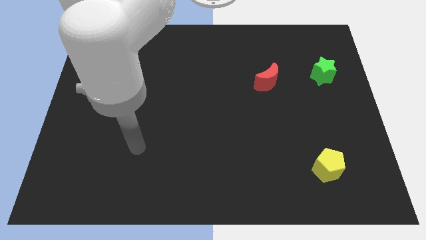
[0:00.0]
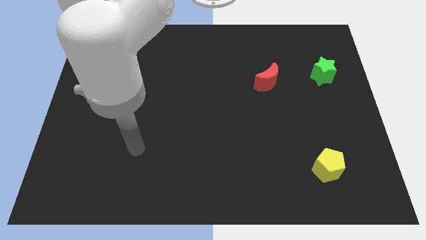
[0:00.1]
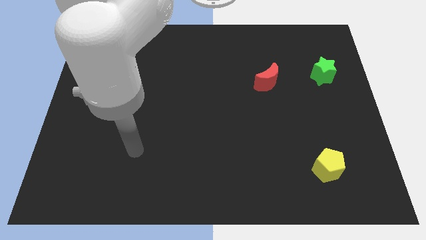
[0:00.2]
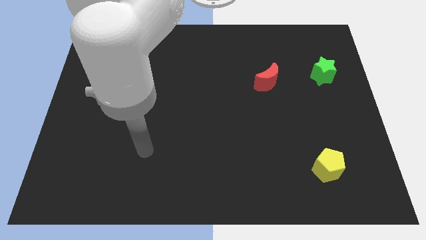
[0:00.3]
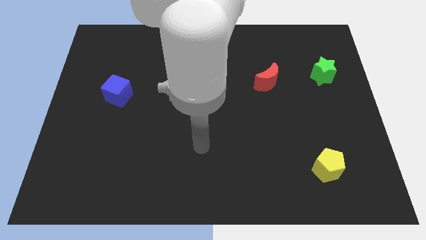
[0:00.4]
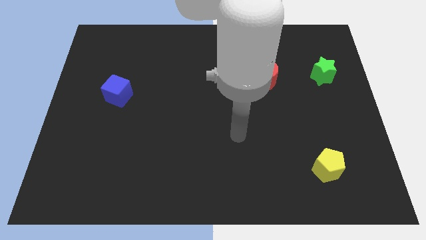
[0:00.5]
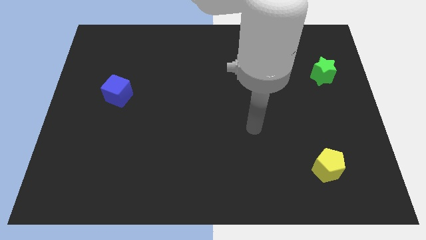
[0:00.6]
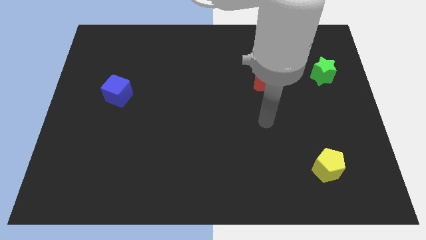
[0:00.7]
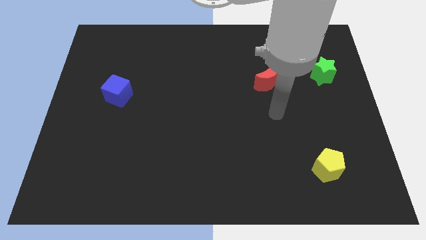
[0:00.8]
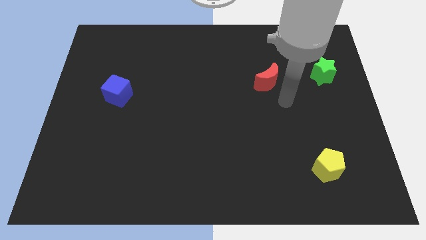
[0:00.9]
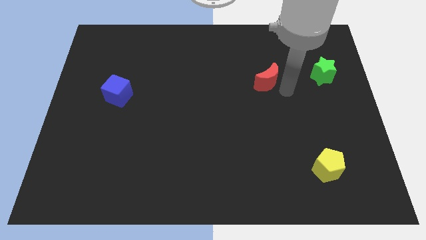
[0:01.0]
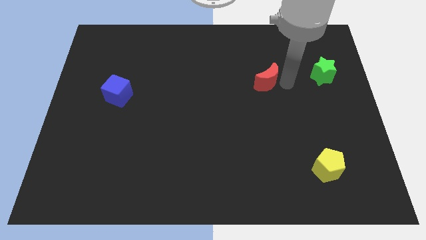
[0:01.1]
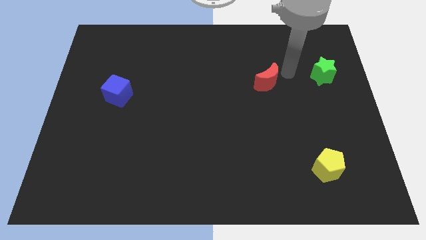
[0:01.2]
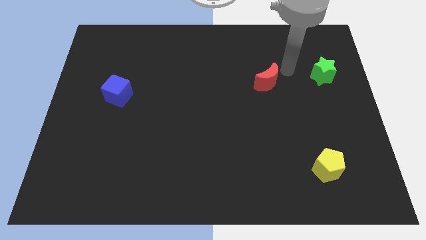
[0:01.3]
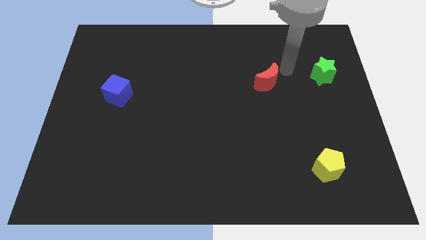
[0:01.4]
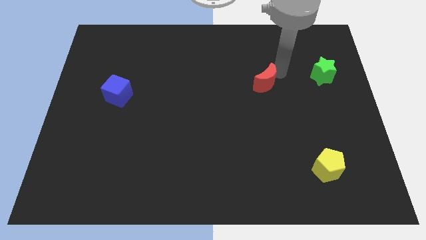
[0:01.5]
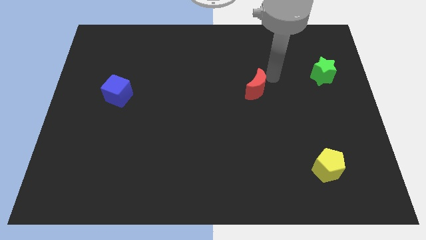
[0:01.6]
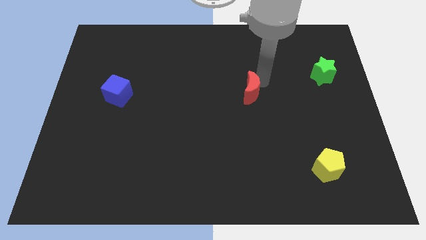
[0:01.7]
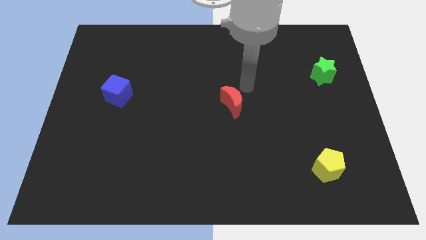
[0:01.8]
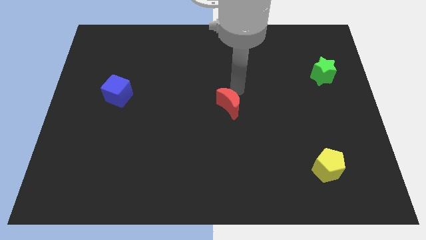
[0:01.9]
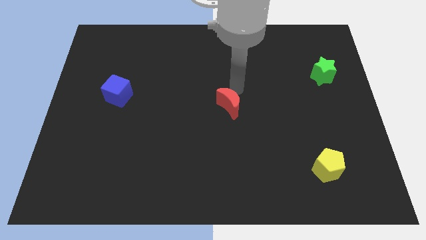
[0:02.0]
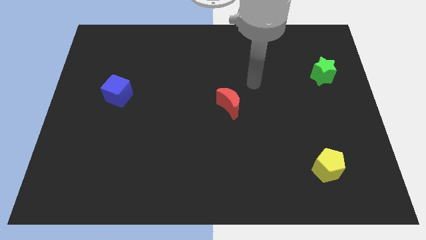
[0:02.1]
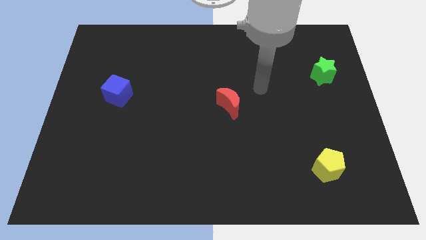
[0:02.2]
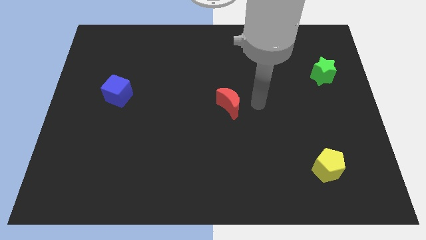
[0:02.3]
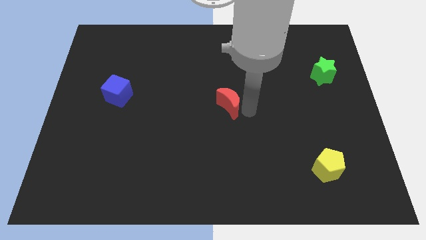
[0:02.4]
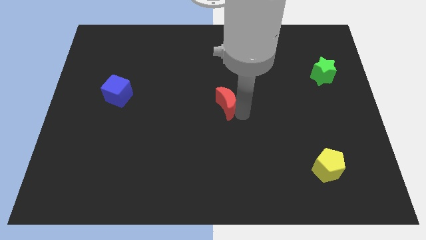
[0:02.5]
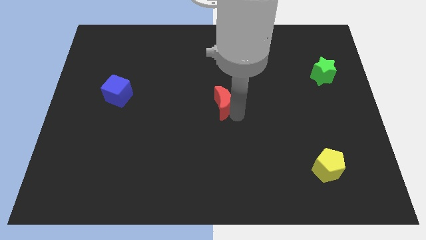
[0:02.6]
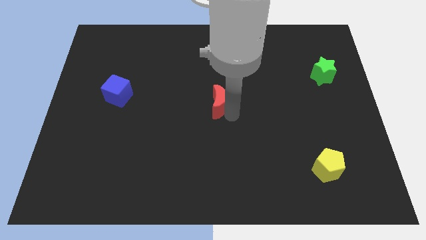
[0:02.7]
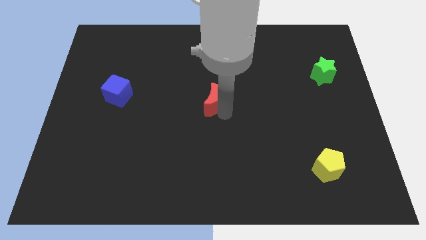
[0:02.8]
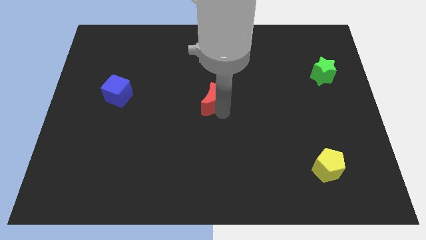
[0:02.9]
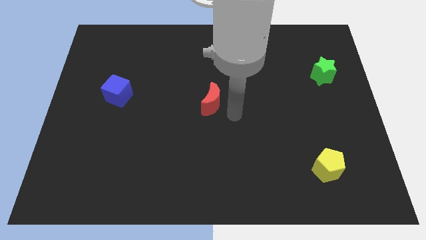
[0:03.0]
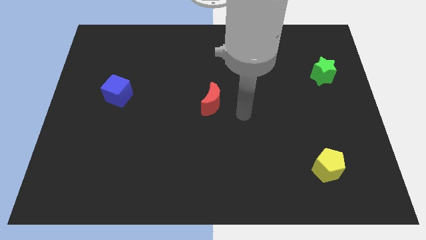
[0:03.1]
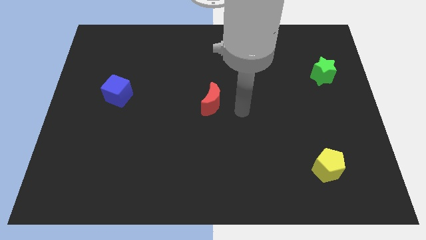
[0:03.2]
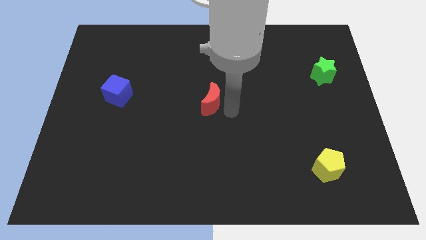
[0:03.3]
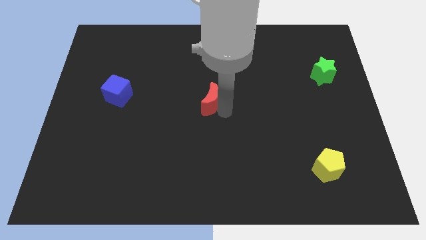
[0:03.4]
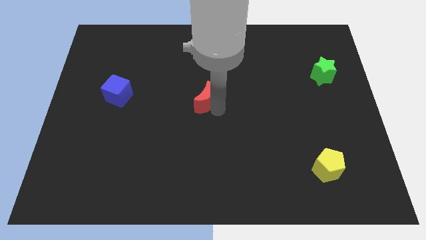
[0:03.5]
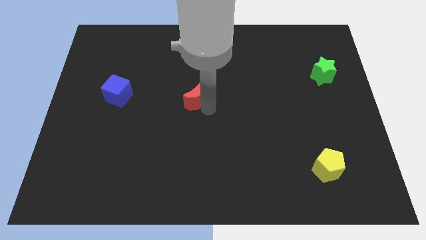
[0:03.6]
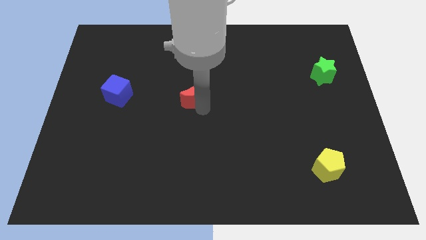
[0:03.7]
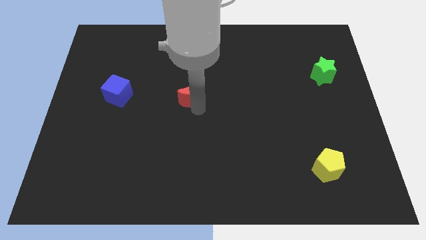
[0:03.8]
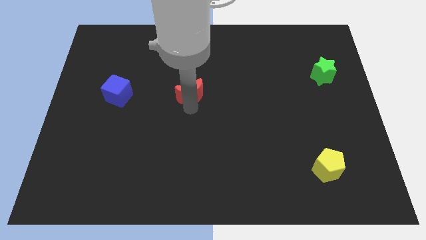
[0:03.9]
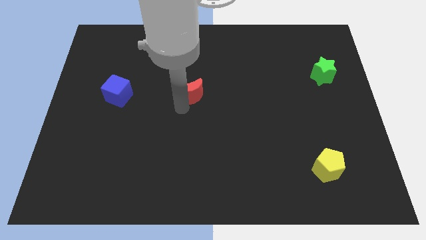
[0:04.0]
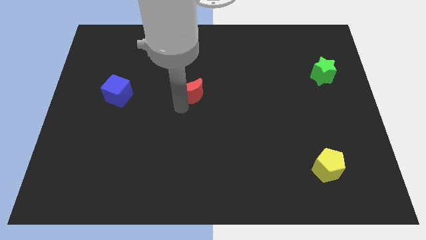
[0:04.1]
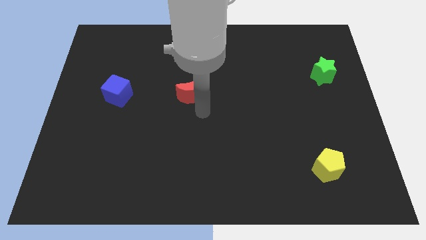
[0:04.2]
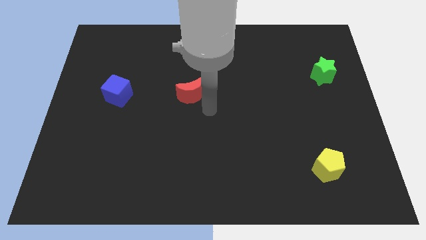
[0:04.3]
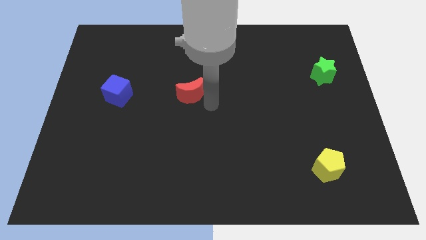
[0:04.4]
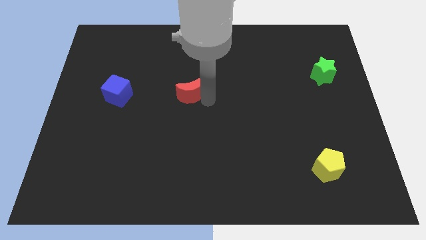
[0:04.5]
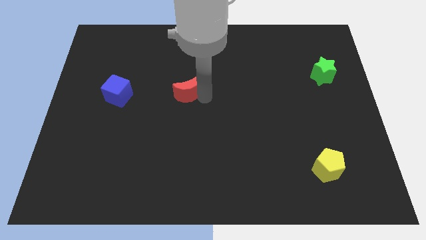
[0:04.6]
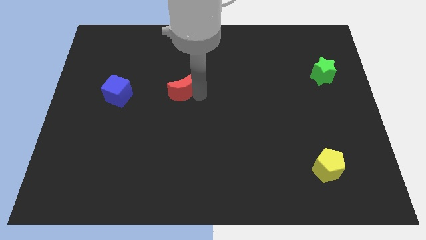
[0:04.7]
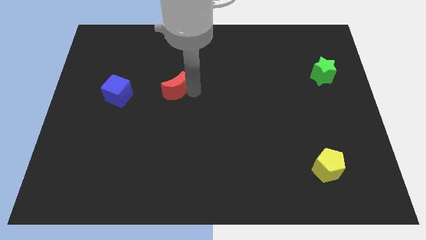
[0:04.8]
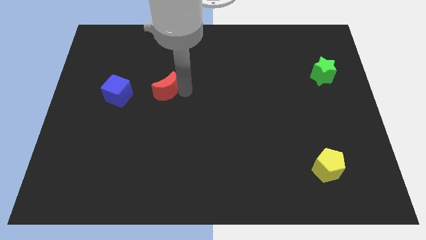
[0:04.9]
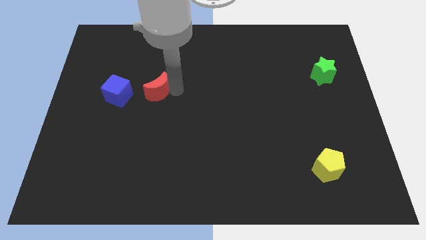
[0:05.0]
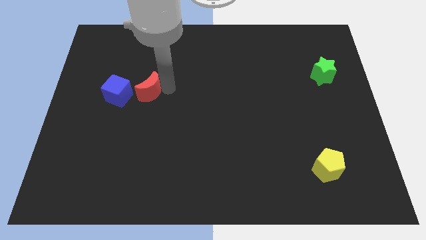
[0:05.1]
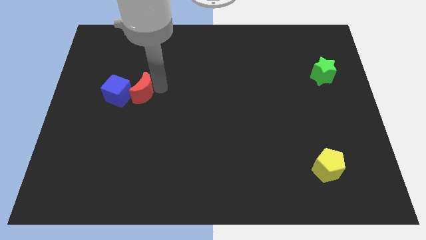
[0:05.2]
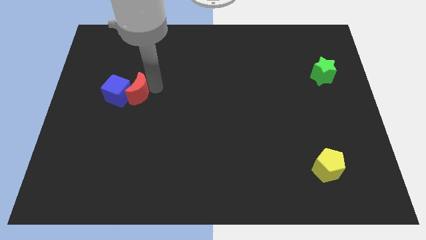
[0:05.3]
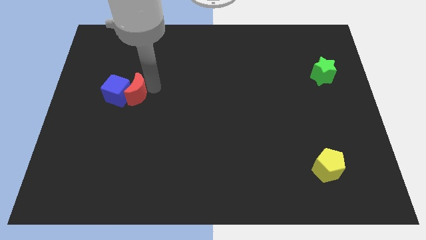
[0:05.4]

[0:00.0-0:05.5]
put the red moon close to the cube

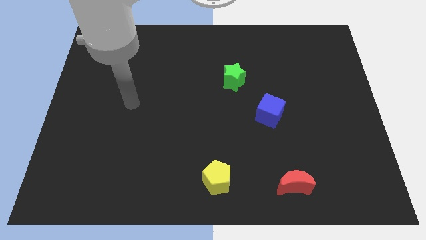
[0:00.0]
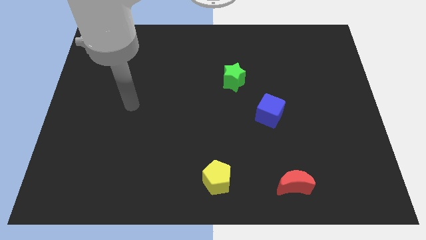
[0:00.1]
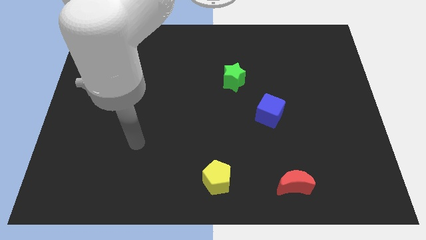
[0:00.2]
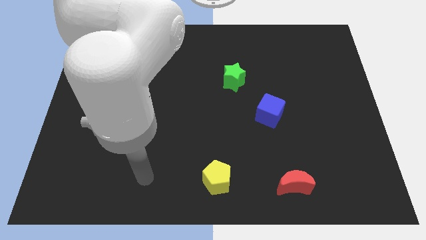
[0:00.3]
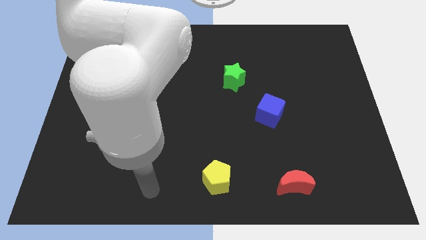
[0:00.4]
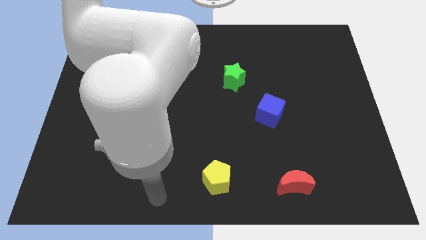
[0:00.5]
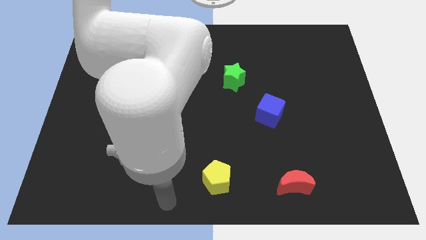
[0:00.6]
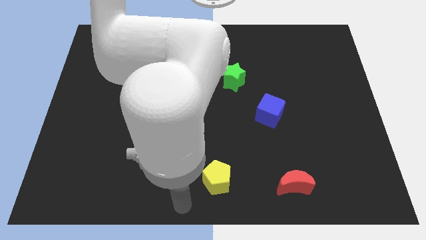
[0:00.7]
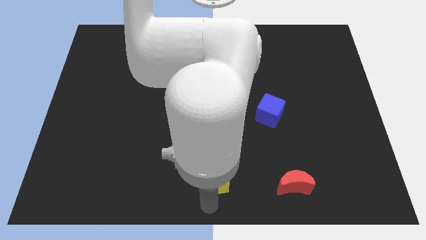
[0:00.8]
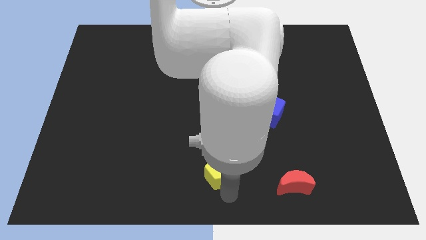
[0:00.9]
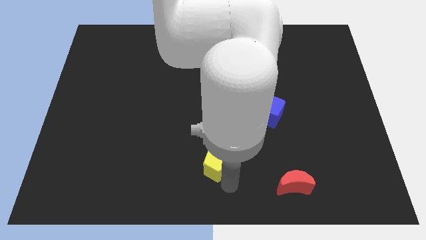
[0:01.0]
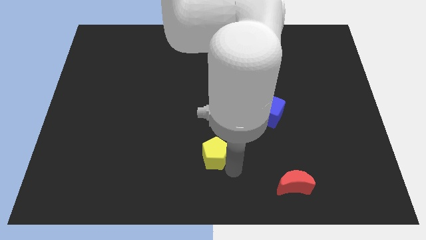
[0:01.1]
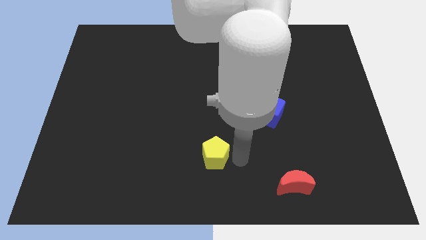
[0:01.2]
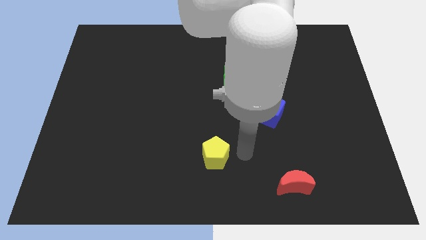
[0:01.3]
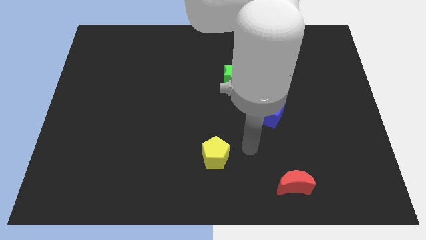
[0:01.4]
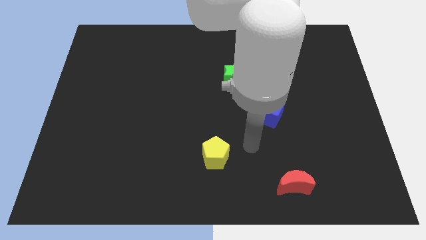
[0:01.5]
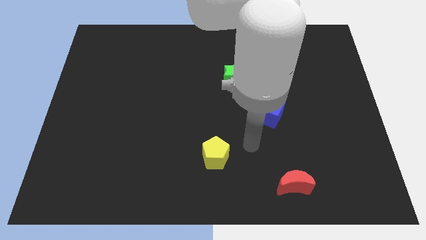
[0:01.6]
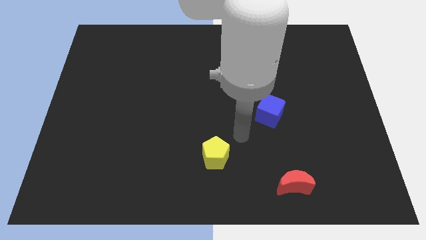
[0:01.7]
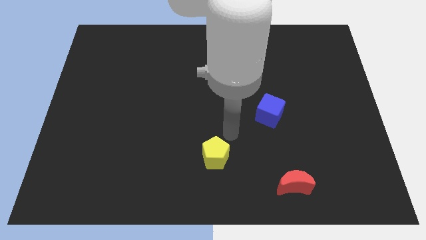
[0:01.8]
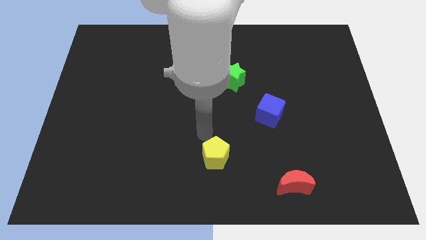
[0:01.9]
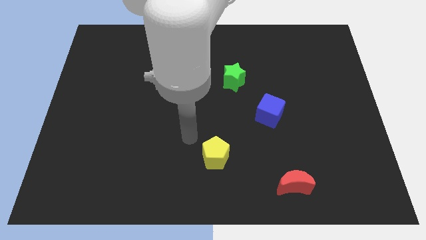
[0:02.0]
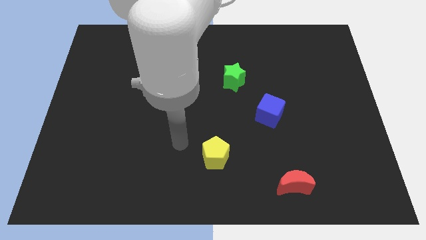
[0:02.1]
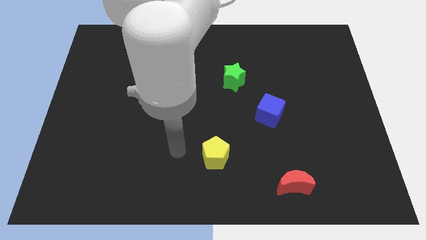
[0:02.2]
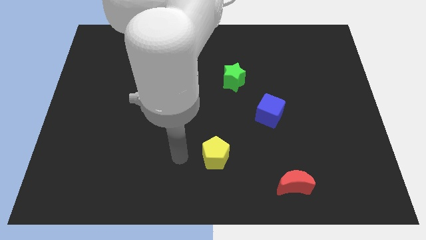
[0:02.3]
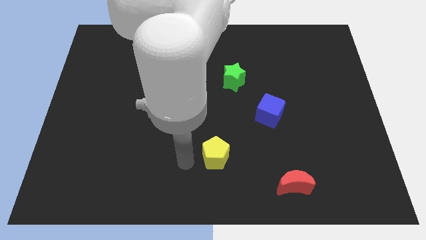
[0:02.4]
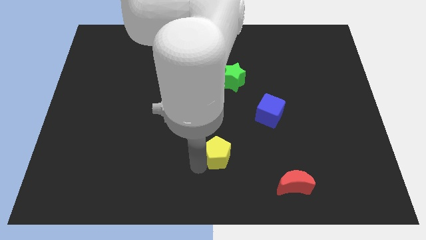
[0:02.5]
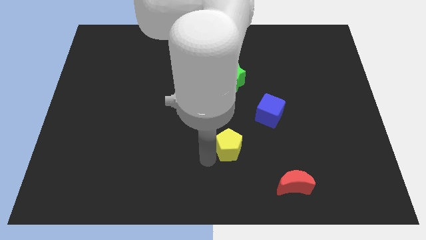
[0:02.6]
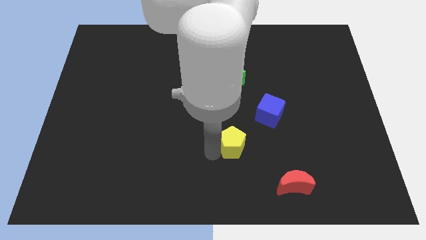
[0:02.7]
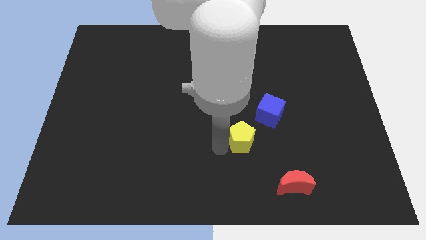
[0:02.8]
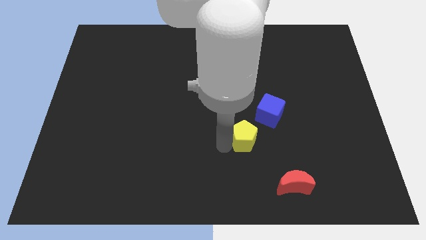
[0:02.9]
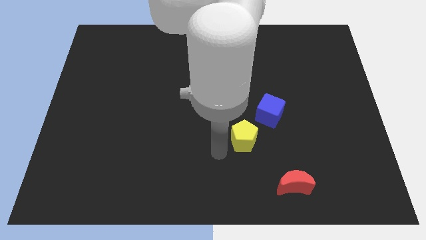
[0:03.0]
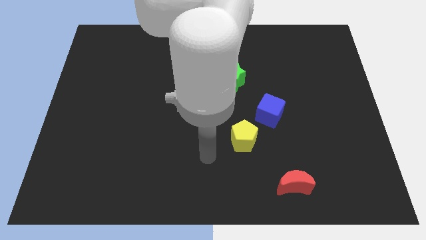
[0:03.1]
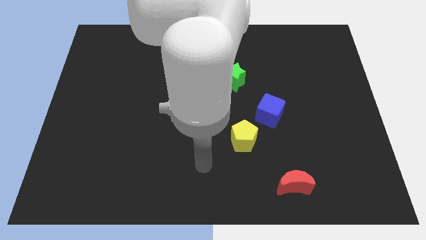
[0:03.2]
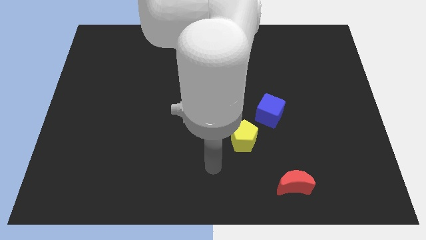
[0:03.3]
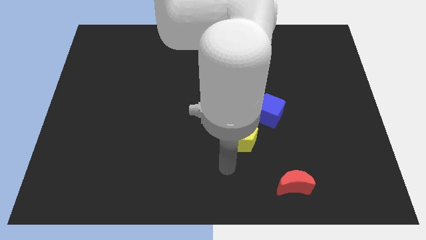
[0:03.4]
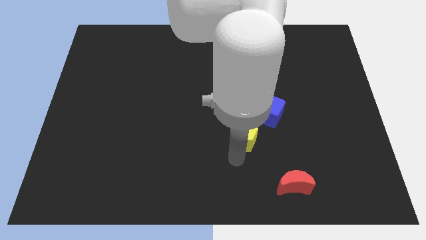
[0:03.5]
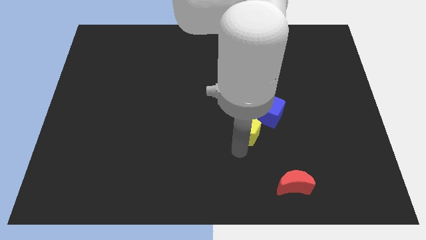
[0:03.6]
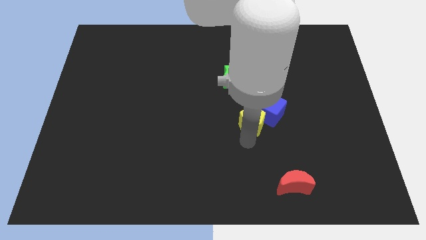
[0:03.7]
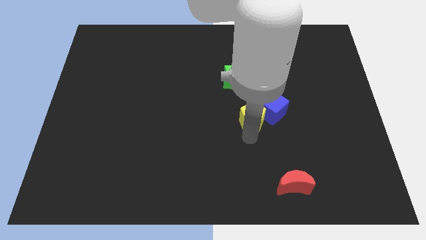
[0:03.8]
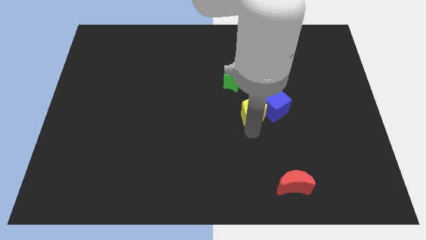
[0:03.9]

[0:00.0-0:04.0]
put the yellow block to the blue block
